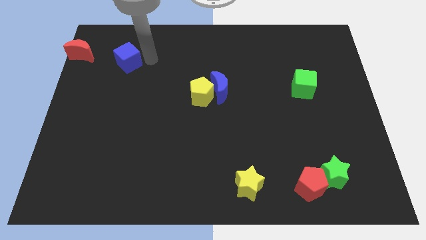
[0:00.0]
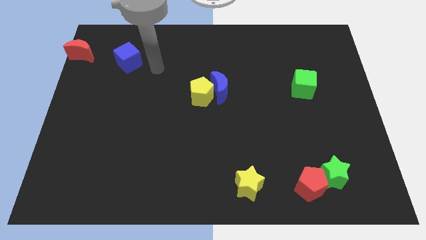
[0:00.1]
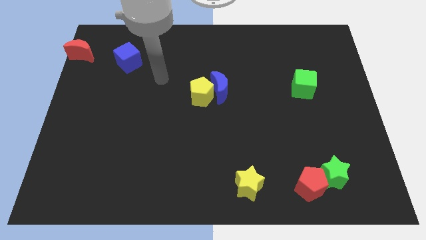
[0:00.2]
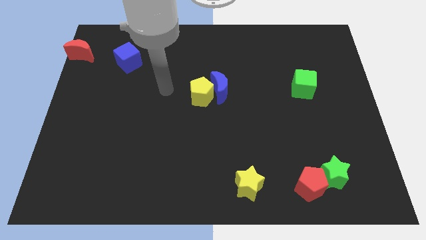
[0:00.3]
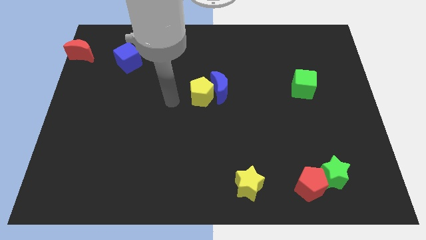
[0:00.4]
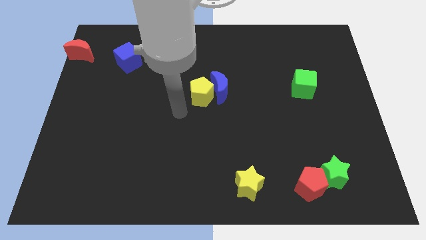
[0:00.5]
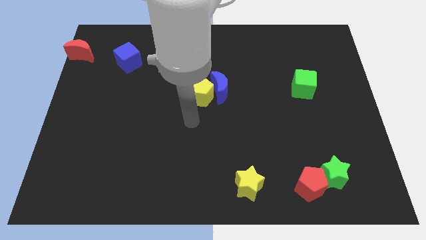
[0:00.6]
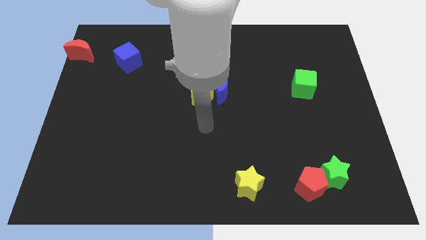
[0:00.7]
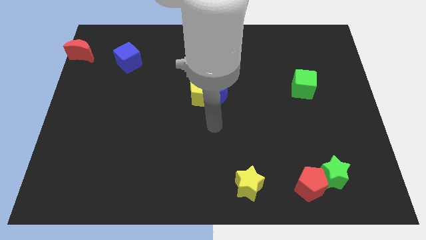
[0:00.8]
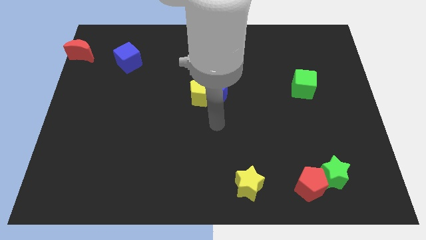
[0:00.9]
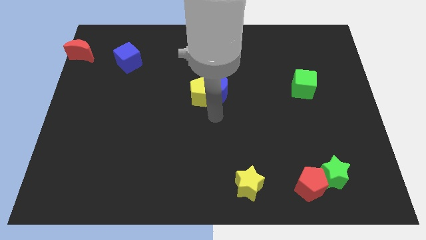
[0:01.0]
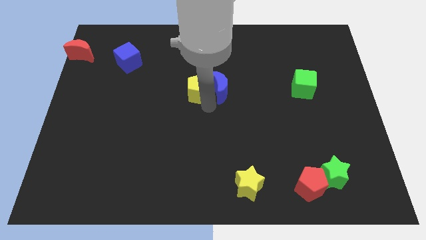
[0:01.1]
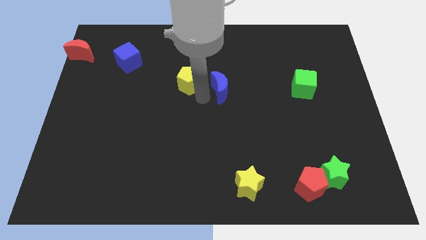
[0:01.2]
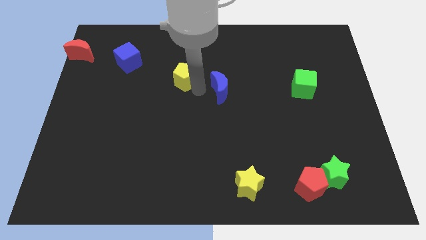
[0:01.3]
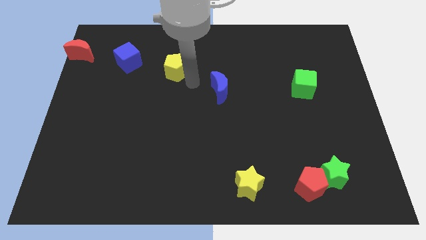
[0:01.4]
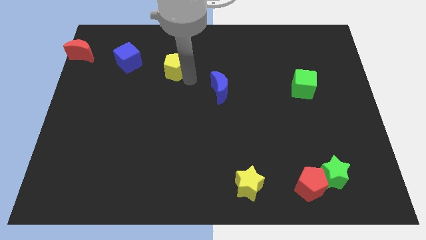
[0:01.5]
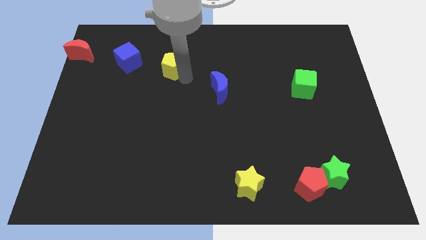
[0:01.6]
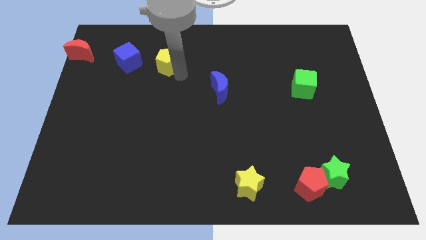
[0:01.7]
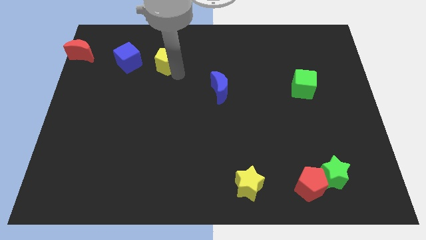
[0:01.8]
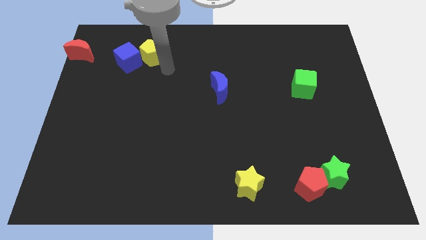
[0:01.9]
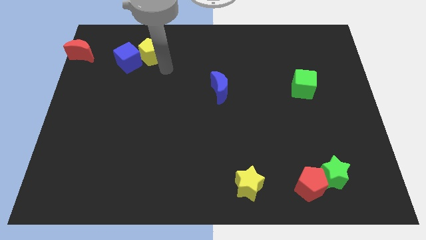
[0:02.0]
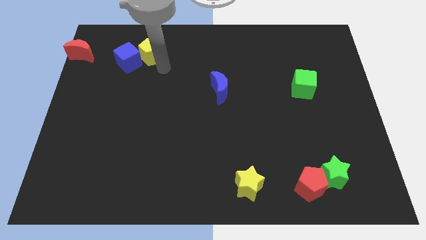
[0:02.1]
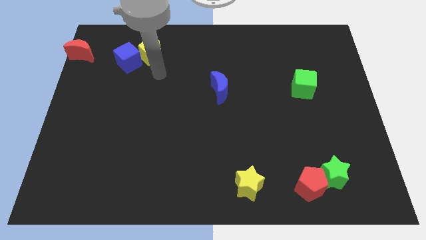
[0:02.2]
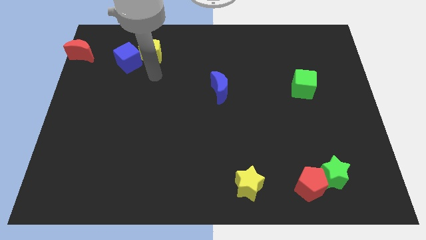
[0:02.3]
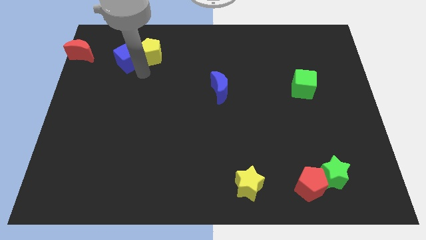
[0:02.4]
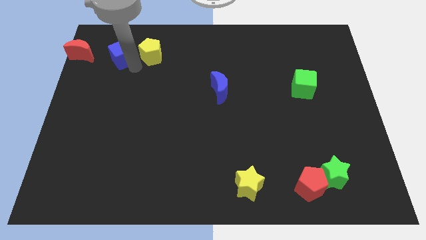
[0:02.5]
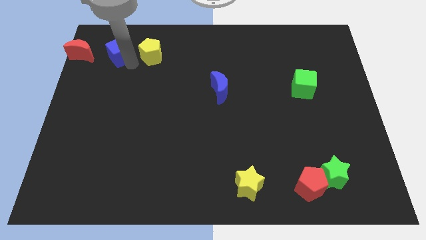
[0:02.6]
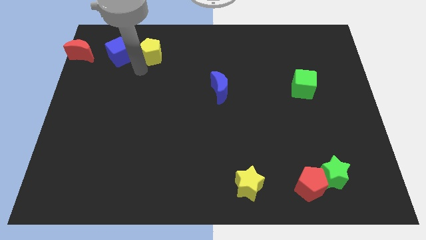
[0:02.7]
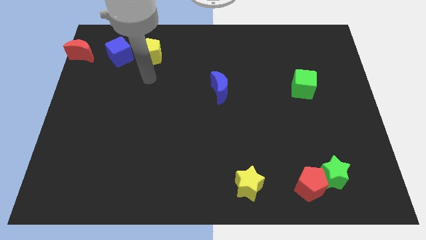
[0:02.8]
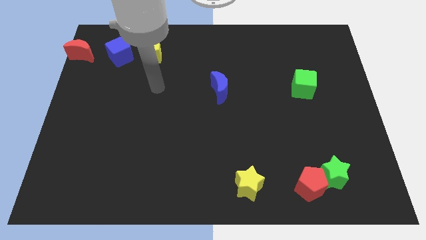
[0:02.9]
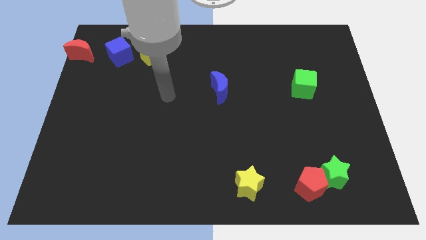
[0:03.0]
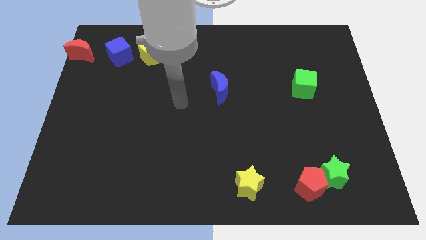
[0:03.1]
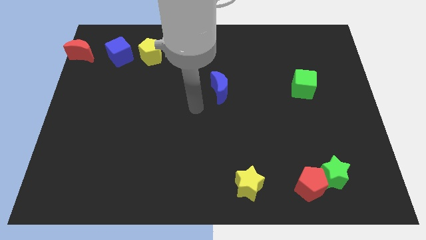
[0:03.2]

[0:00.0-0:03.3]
put the blue cube and yellow pentagon horizontally to the right side of the red crescent

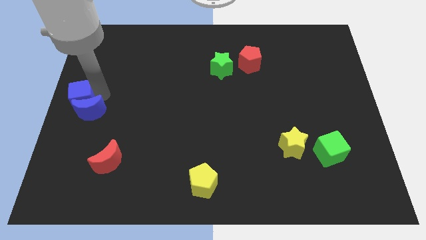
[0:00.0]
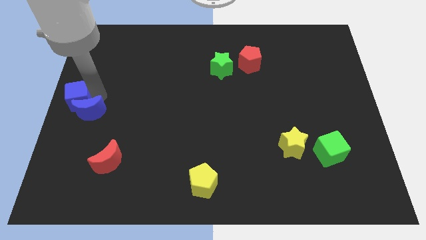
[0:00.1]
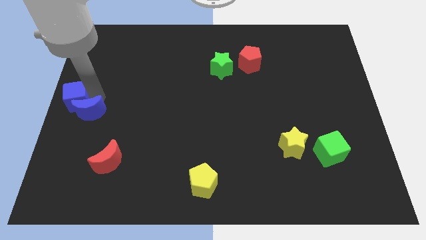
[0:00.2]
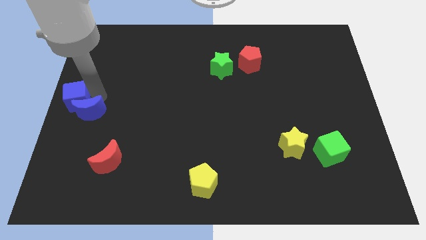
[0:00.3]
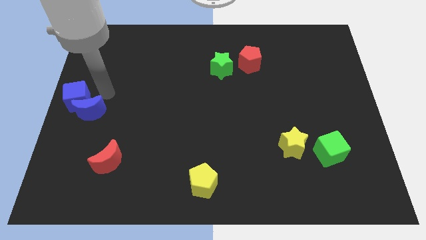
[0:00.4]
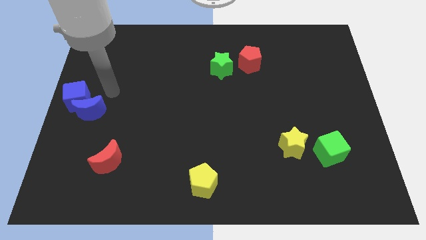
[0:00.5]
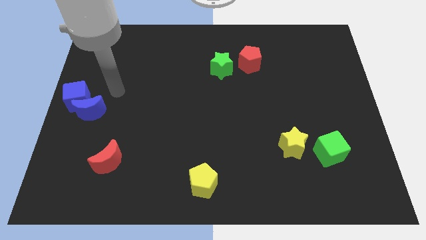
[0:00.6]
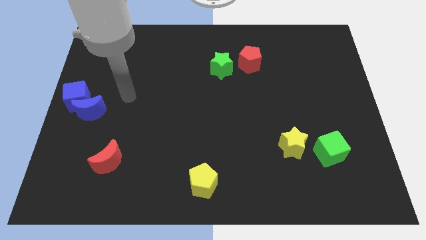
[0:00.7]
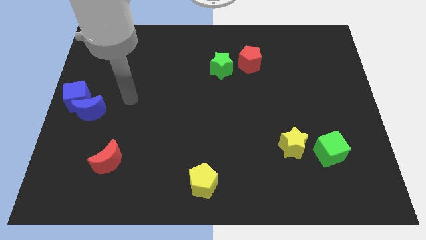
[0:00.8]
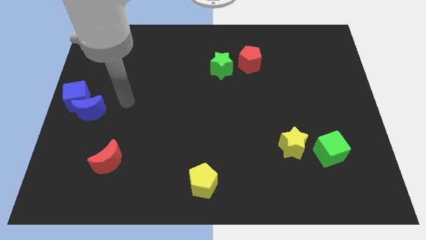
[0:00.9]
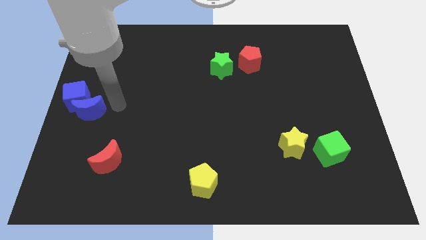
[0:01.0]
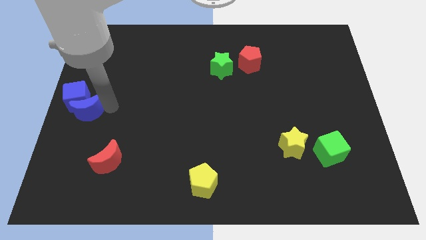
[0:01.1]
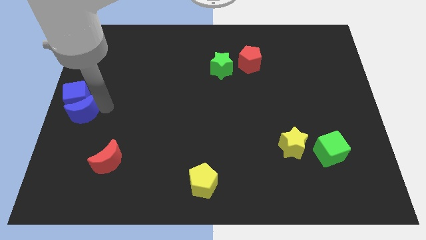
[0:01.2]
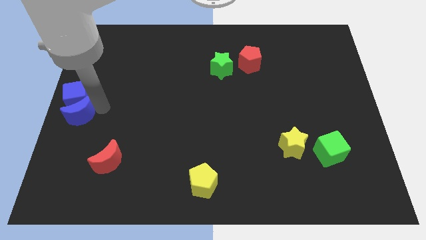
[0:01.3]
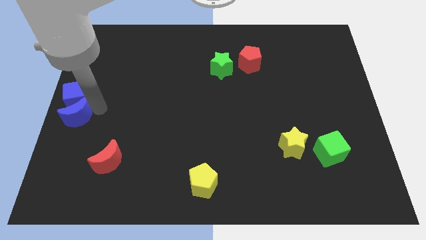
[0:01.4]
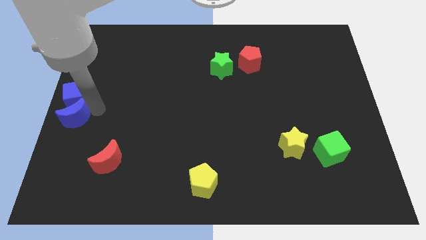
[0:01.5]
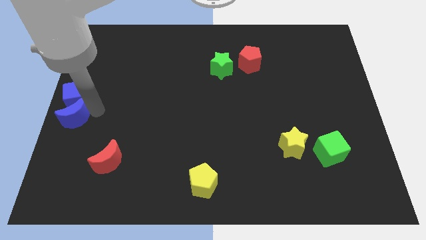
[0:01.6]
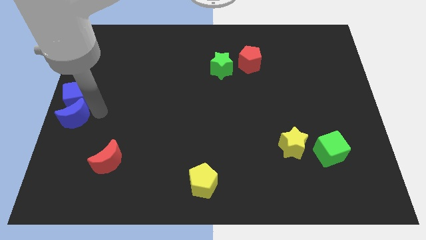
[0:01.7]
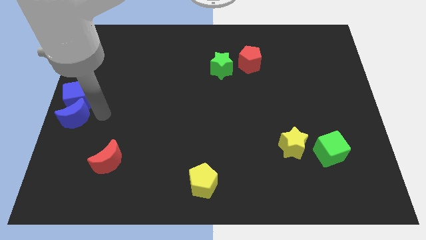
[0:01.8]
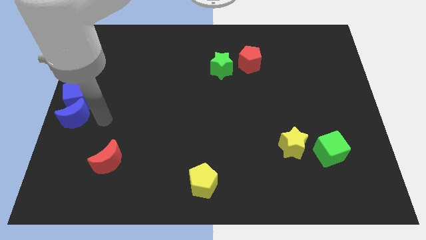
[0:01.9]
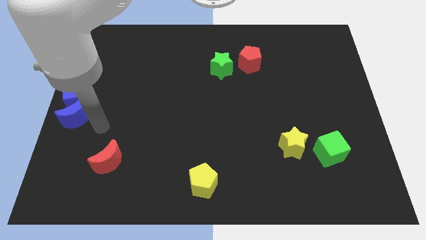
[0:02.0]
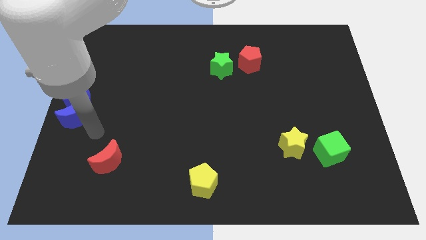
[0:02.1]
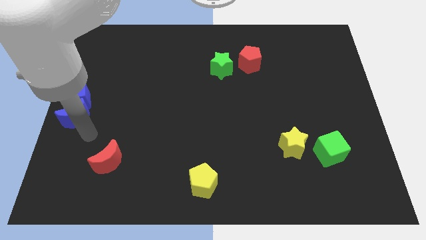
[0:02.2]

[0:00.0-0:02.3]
place the blue moon at the center left

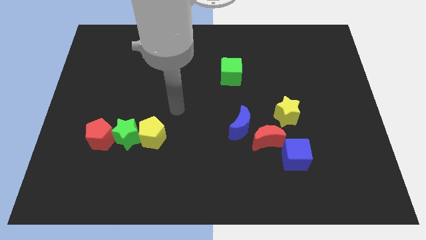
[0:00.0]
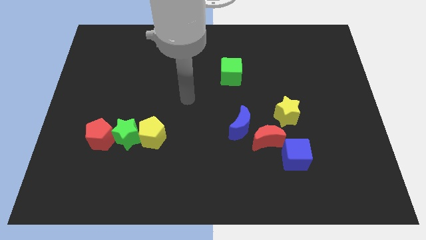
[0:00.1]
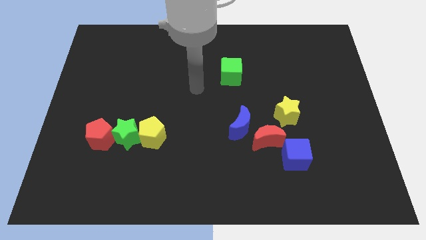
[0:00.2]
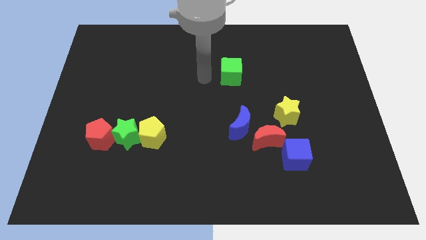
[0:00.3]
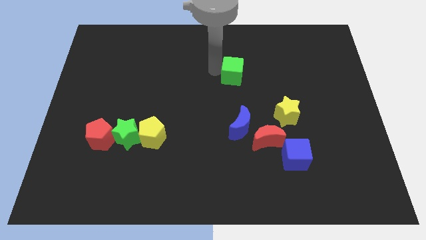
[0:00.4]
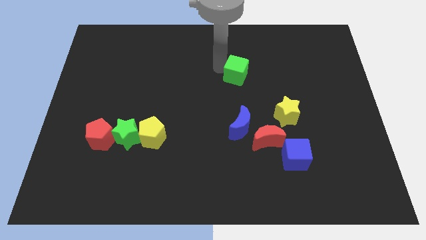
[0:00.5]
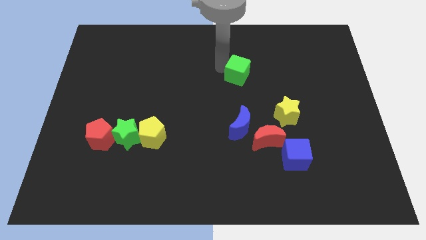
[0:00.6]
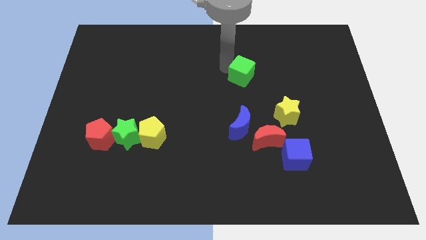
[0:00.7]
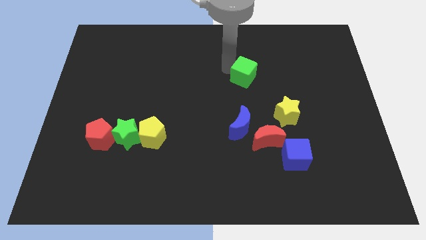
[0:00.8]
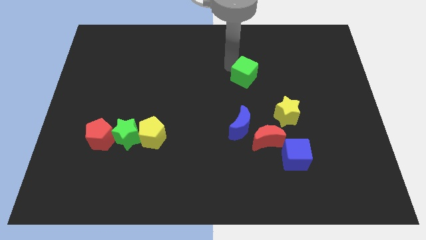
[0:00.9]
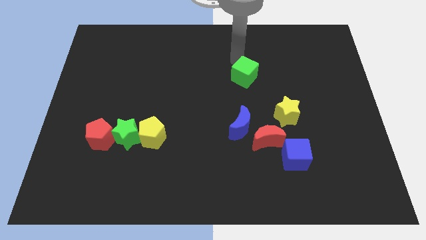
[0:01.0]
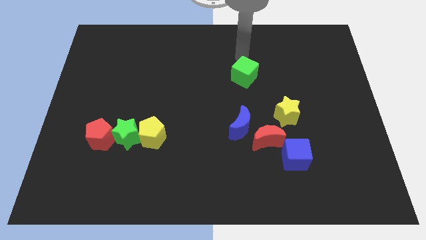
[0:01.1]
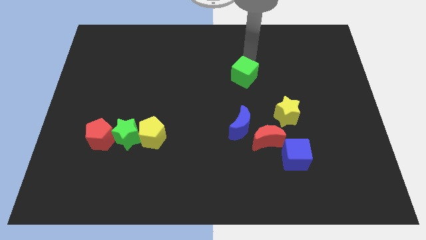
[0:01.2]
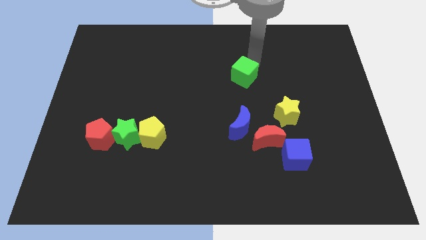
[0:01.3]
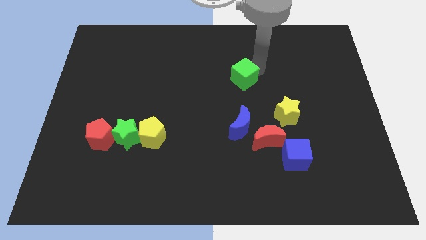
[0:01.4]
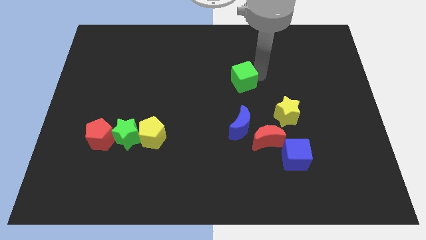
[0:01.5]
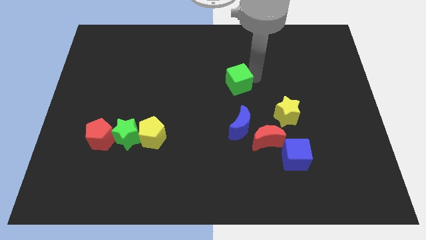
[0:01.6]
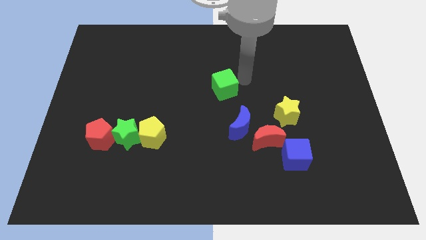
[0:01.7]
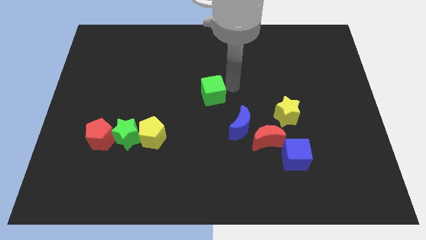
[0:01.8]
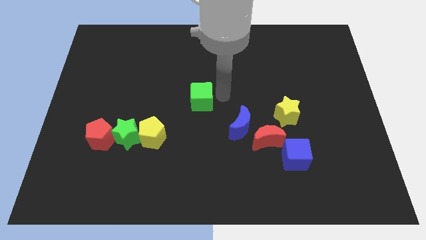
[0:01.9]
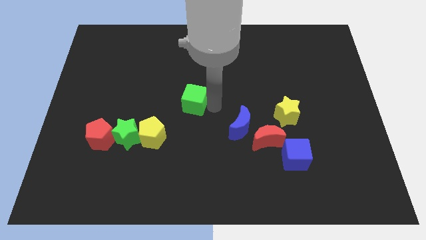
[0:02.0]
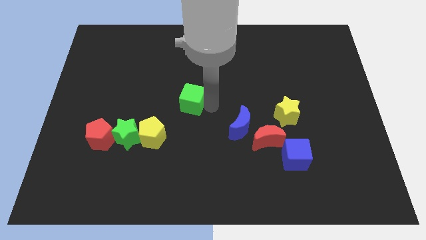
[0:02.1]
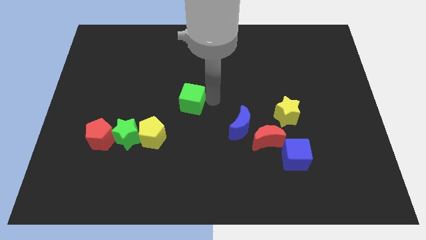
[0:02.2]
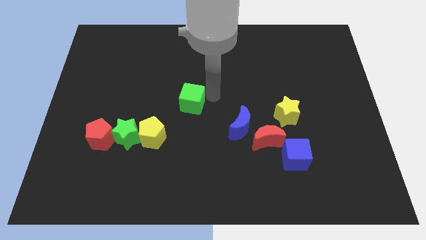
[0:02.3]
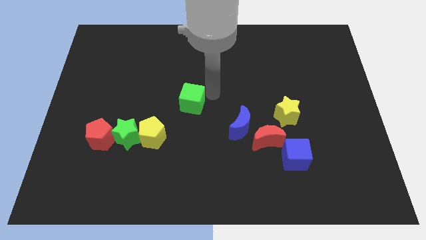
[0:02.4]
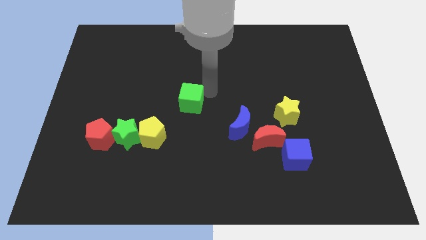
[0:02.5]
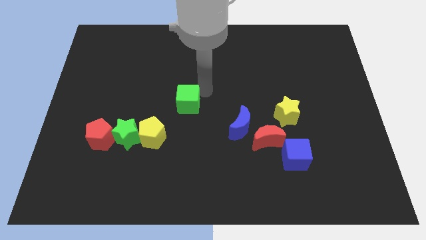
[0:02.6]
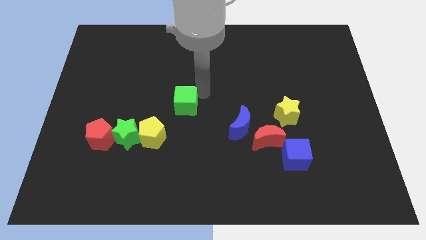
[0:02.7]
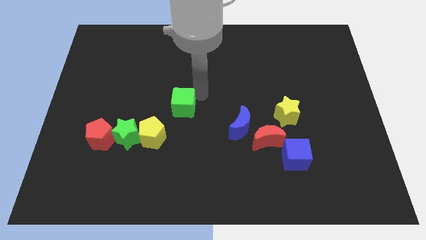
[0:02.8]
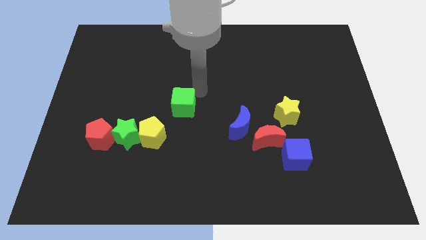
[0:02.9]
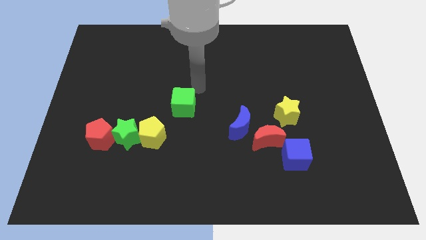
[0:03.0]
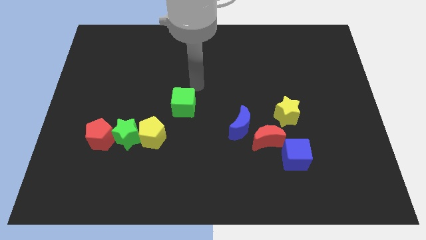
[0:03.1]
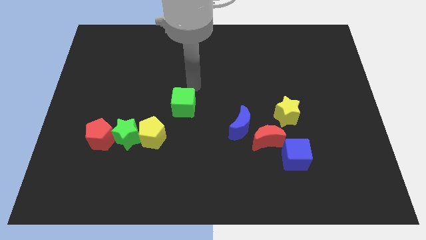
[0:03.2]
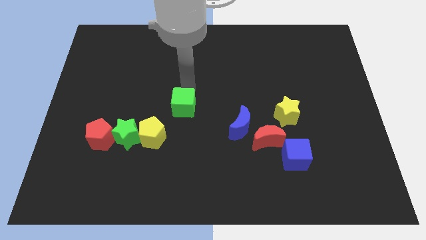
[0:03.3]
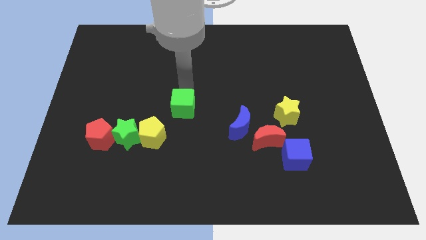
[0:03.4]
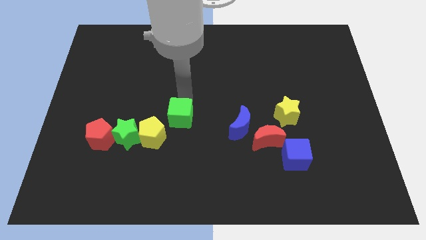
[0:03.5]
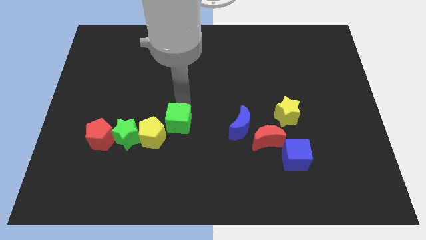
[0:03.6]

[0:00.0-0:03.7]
put the green star parallel left to the blue crescent
